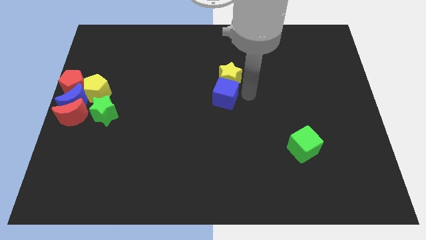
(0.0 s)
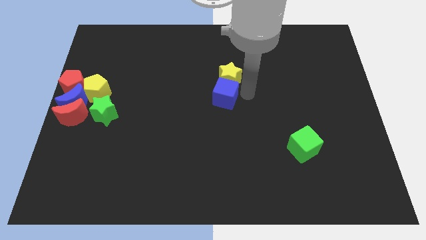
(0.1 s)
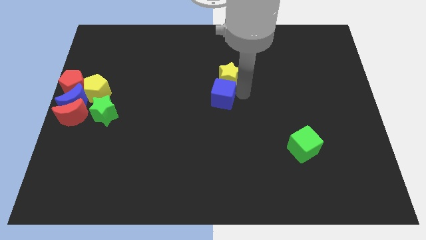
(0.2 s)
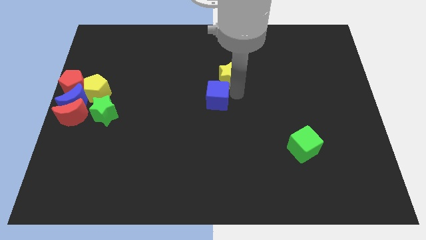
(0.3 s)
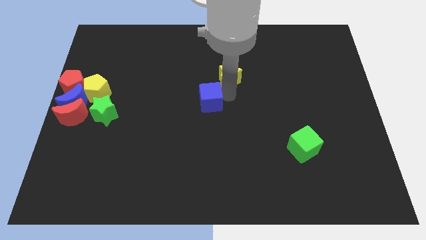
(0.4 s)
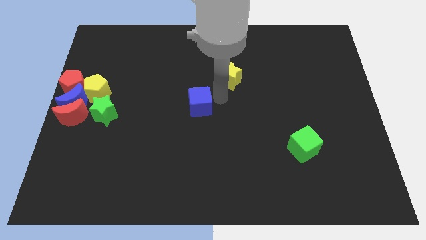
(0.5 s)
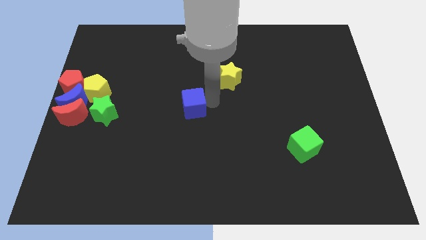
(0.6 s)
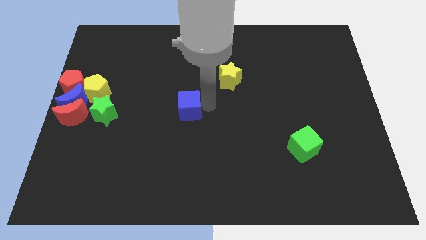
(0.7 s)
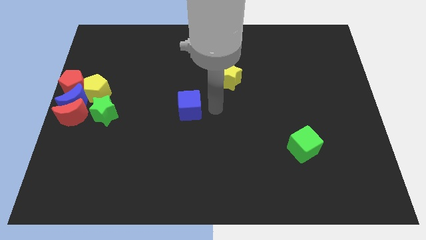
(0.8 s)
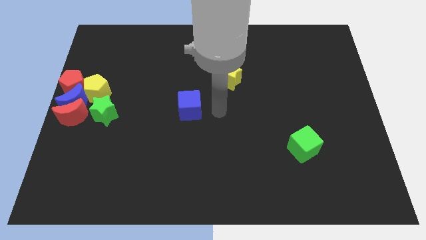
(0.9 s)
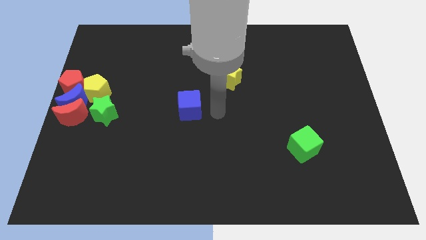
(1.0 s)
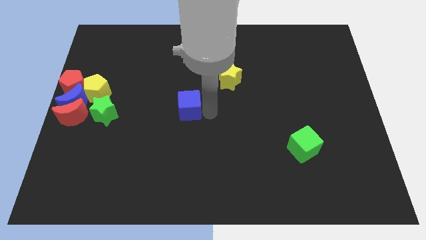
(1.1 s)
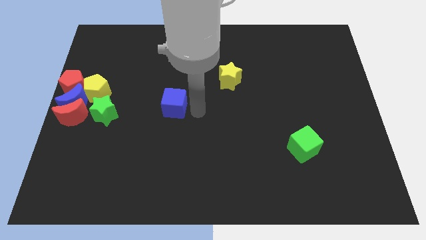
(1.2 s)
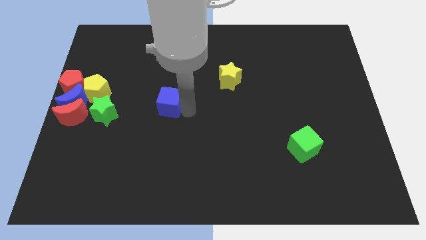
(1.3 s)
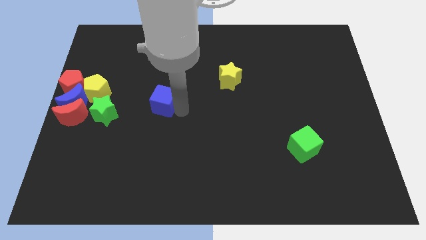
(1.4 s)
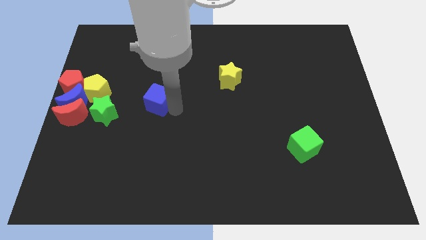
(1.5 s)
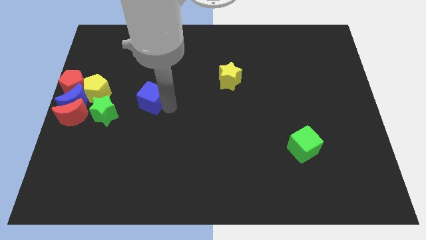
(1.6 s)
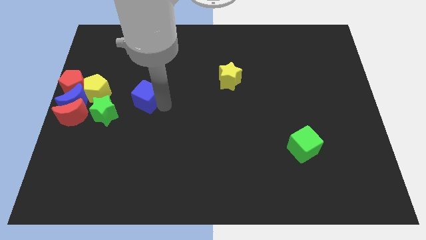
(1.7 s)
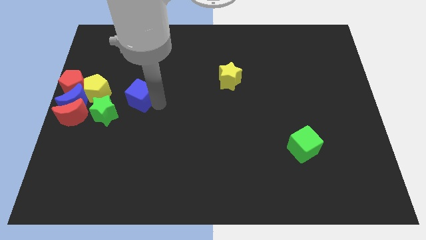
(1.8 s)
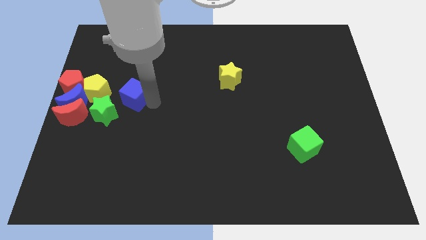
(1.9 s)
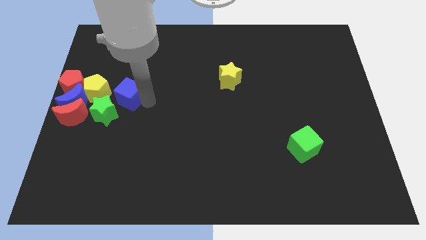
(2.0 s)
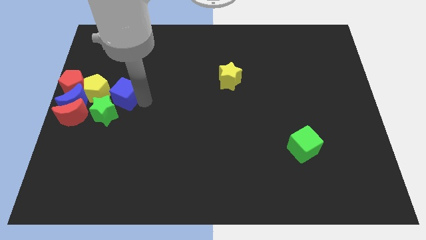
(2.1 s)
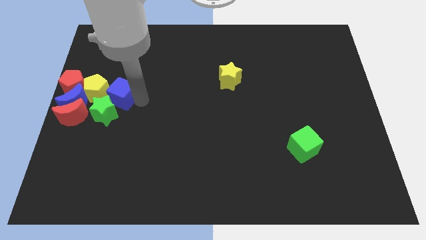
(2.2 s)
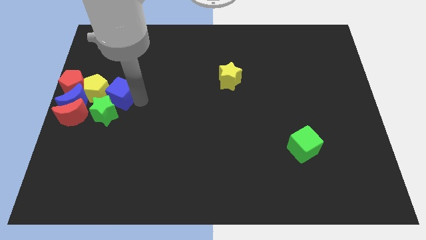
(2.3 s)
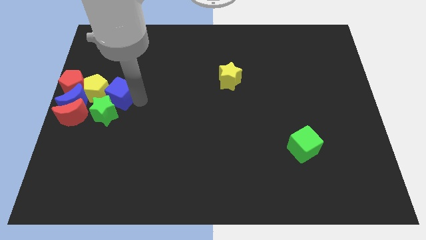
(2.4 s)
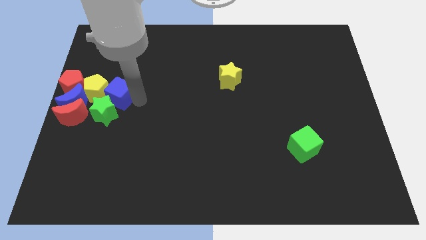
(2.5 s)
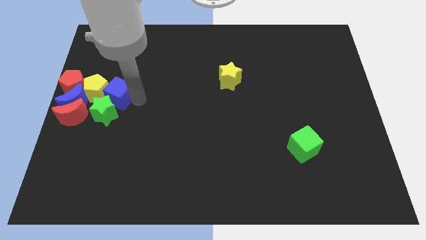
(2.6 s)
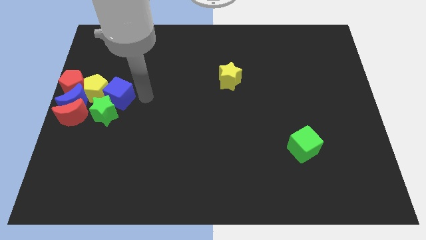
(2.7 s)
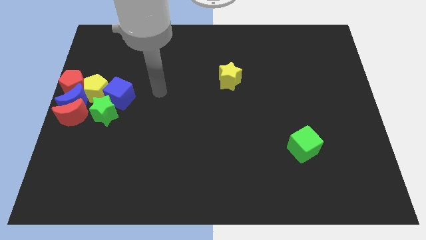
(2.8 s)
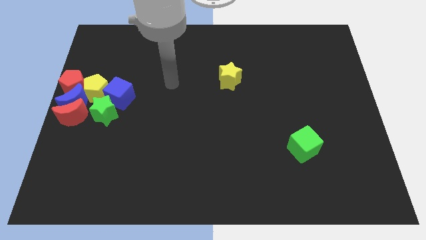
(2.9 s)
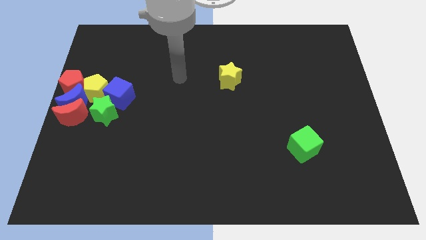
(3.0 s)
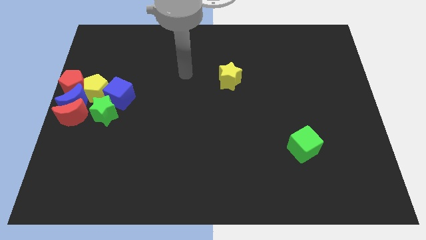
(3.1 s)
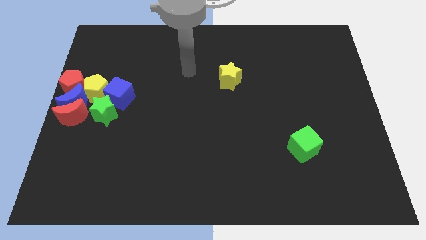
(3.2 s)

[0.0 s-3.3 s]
push the blue cube into the yellow pentagon

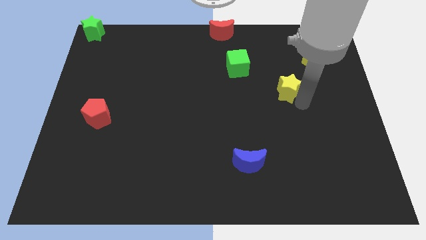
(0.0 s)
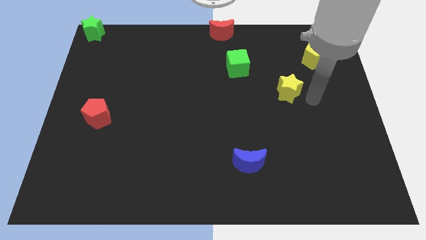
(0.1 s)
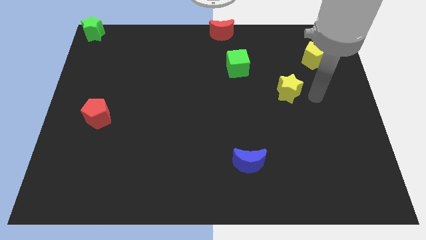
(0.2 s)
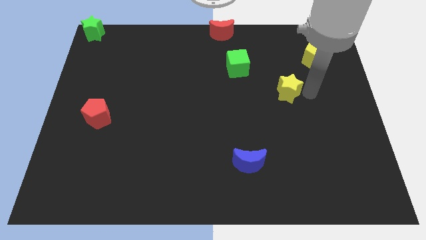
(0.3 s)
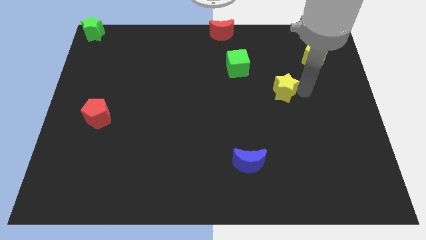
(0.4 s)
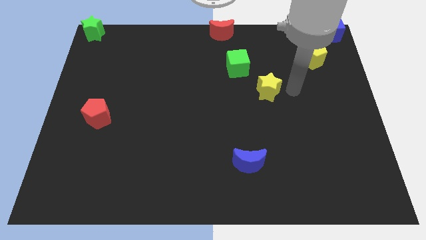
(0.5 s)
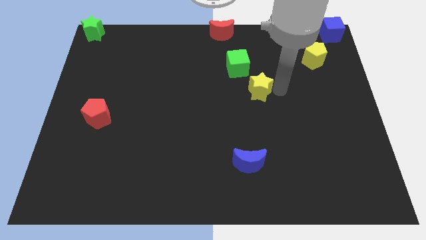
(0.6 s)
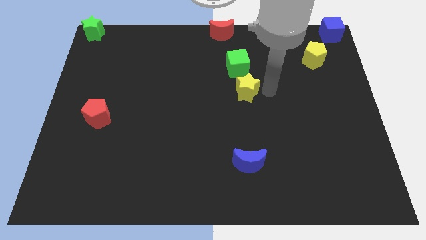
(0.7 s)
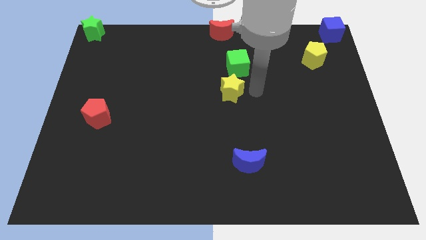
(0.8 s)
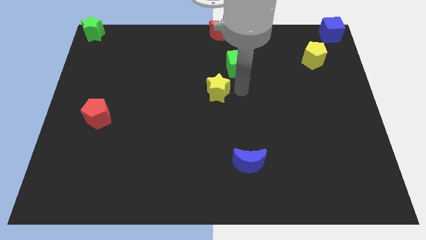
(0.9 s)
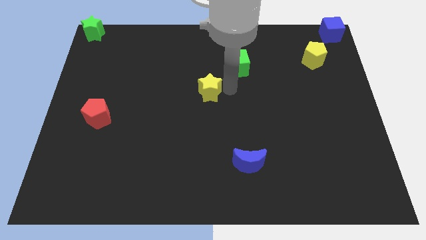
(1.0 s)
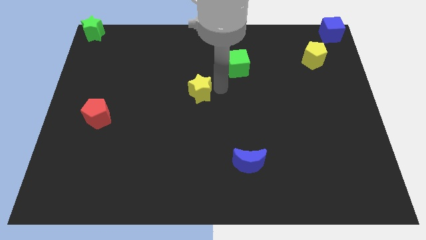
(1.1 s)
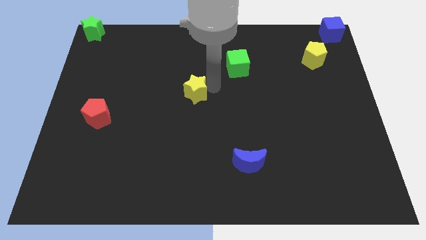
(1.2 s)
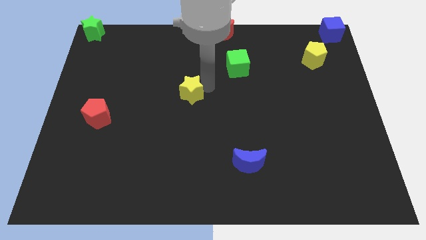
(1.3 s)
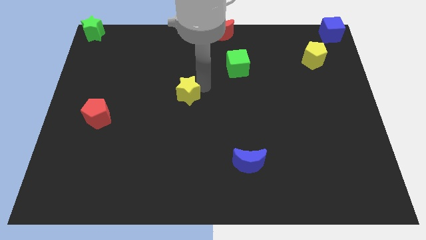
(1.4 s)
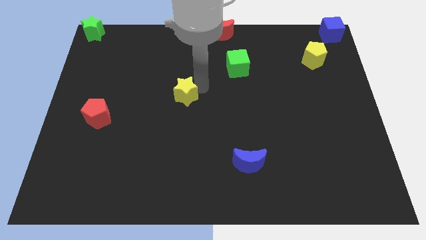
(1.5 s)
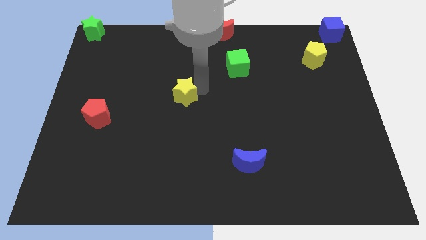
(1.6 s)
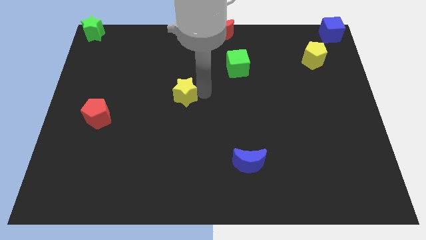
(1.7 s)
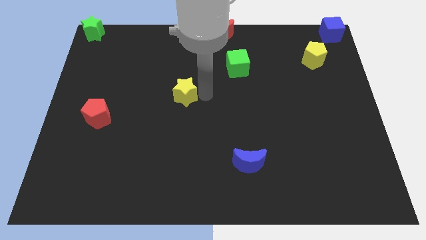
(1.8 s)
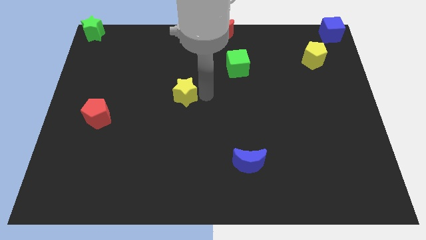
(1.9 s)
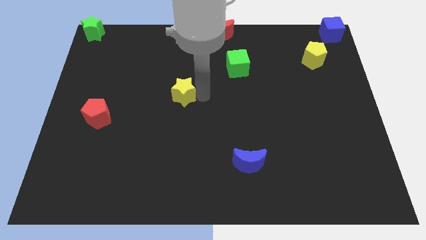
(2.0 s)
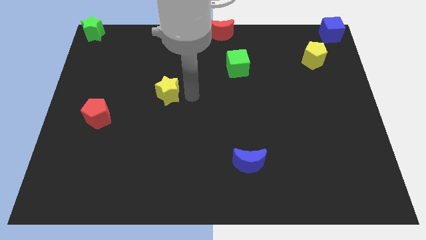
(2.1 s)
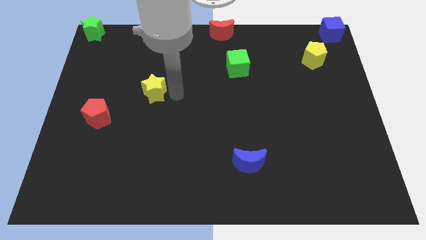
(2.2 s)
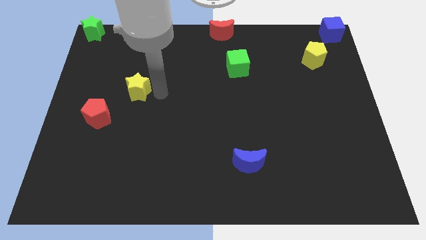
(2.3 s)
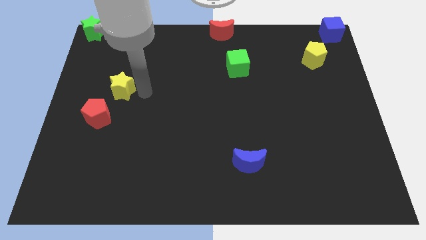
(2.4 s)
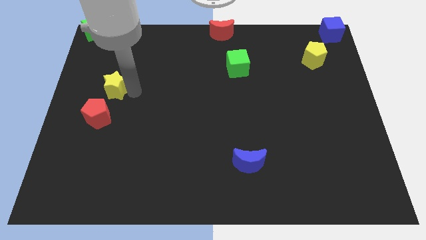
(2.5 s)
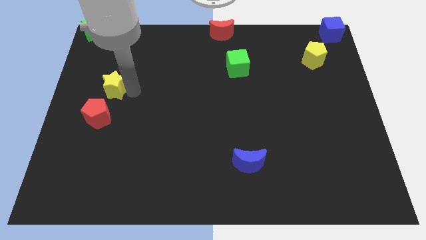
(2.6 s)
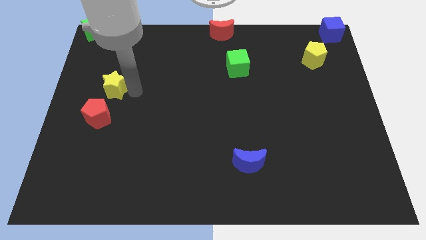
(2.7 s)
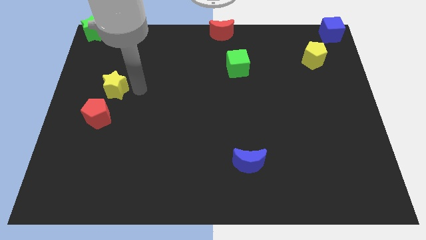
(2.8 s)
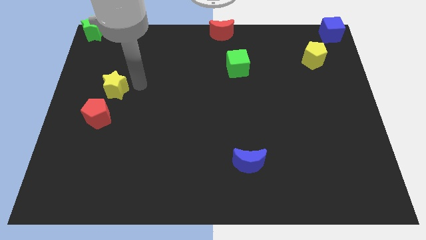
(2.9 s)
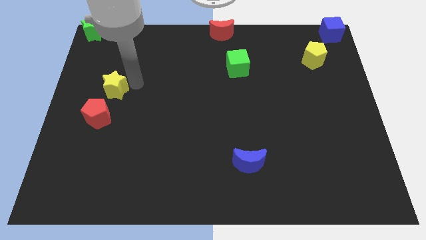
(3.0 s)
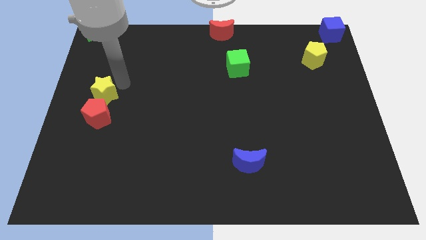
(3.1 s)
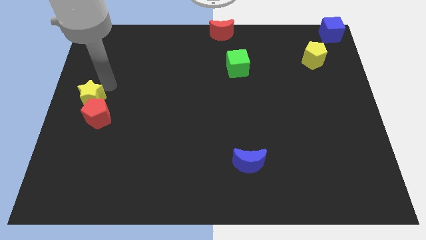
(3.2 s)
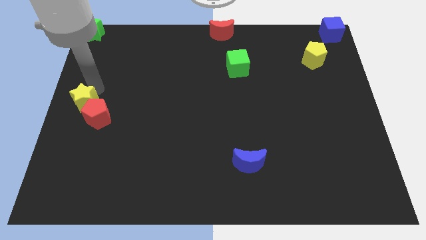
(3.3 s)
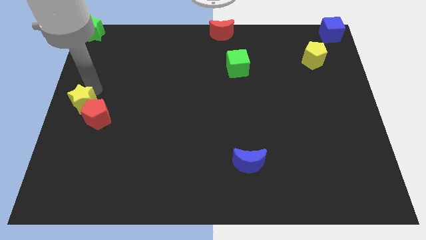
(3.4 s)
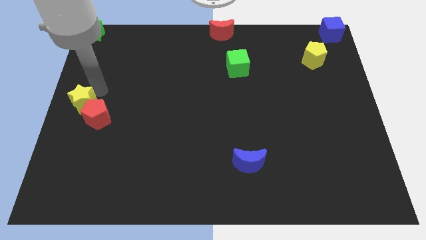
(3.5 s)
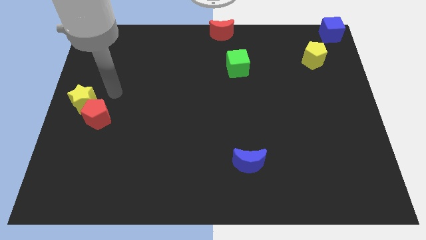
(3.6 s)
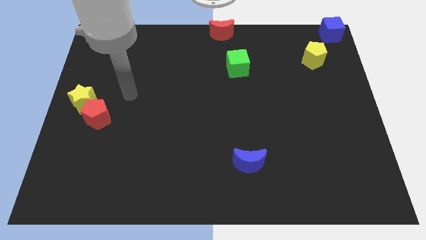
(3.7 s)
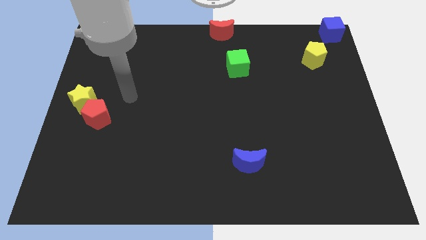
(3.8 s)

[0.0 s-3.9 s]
push the yellow star to the left side of the board

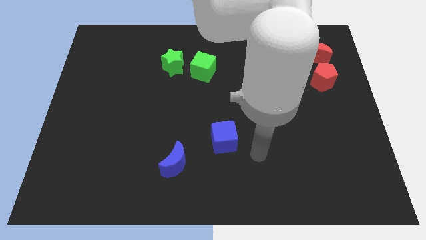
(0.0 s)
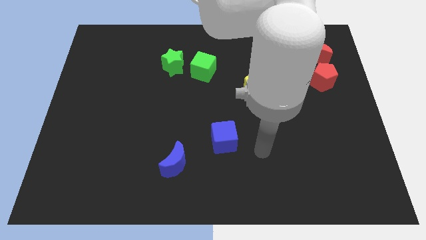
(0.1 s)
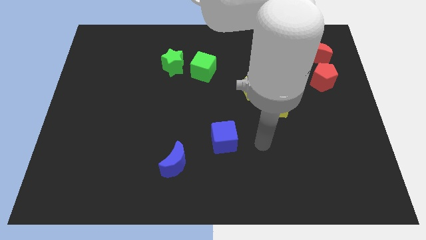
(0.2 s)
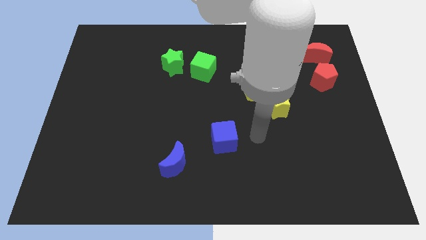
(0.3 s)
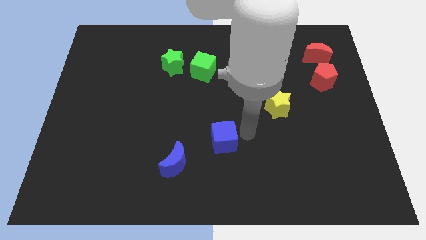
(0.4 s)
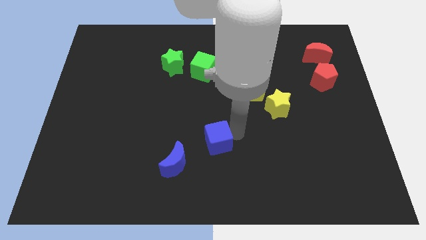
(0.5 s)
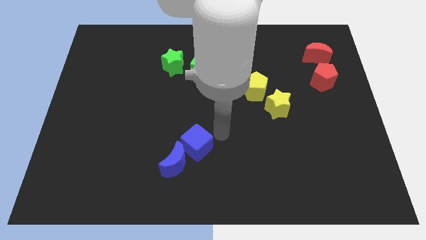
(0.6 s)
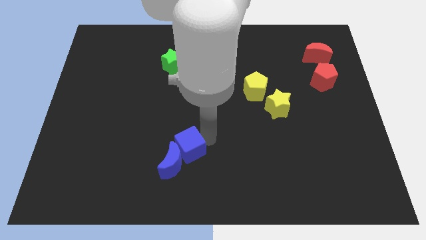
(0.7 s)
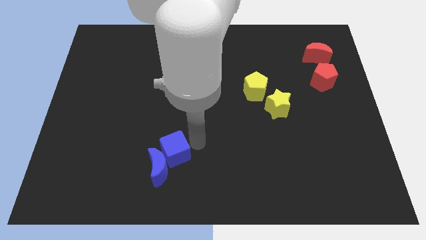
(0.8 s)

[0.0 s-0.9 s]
move the blue cube into the blue crescent

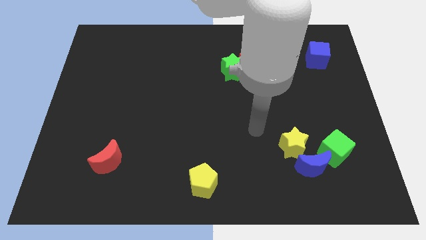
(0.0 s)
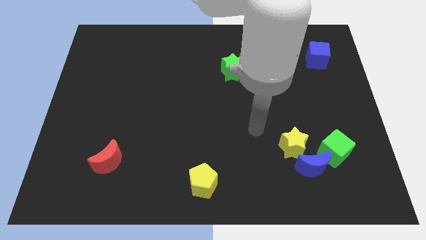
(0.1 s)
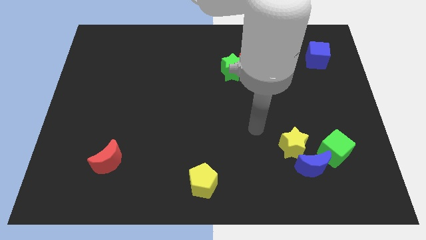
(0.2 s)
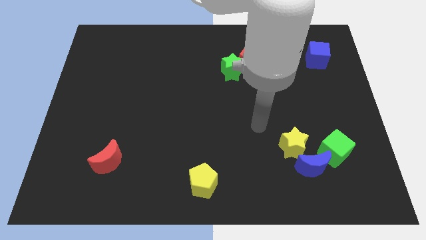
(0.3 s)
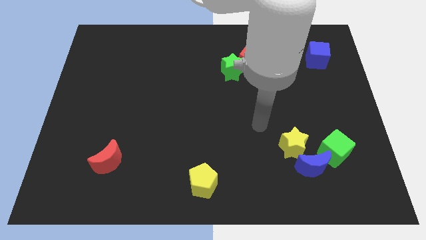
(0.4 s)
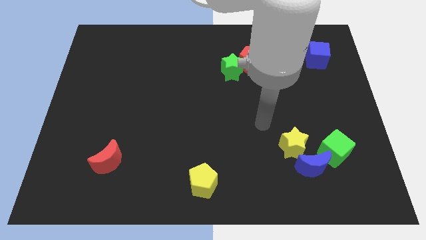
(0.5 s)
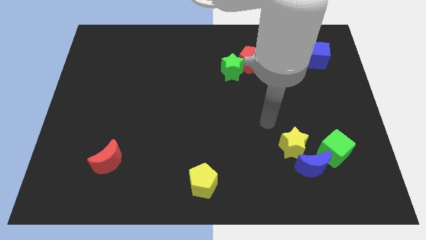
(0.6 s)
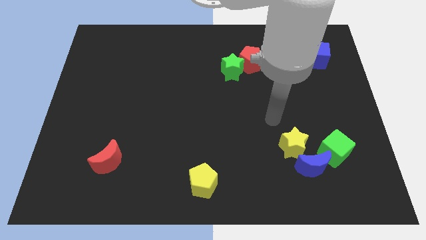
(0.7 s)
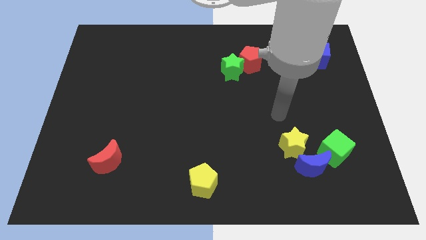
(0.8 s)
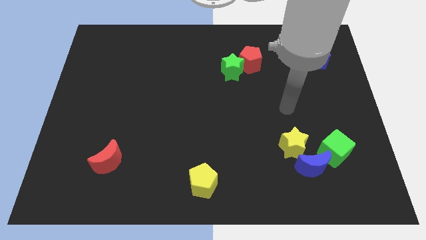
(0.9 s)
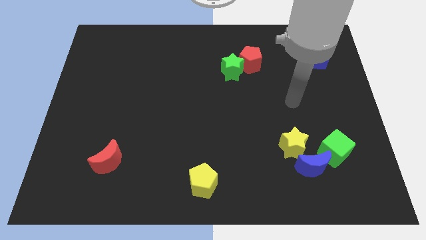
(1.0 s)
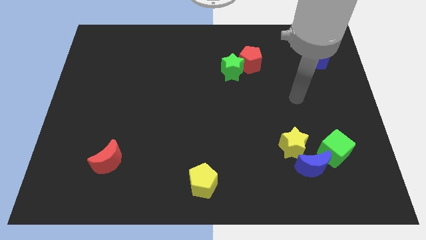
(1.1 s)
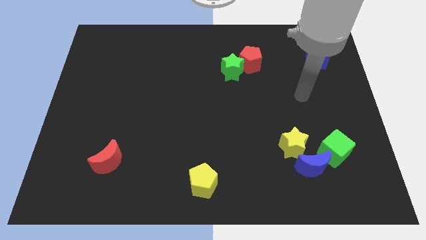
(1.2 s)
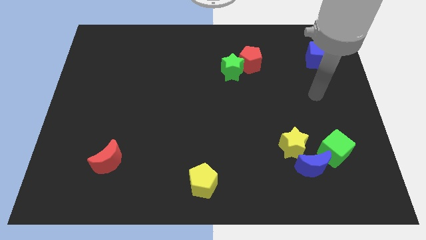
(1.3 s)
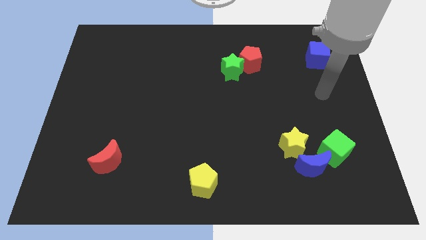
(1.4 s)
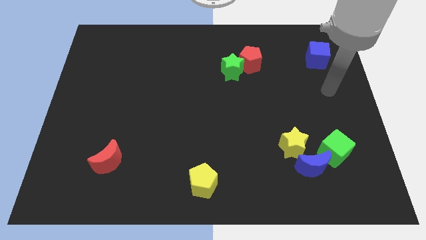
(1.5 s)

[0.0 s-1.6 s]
place your arm in between blue cube and green cube
